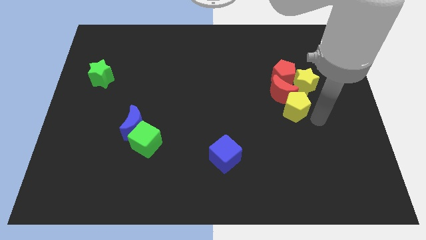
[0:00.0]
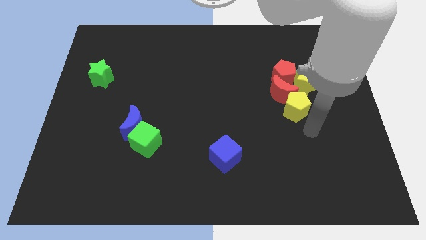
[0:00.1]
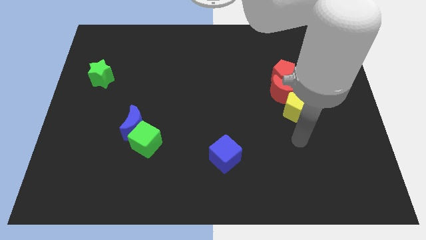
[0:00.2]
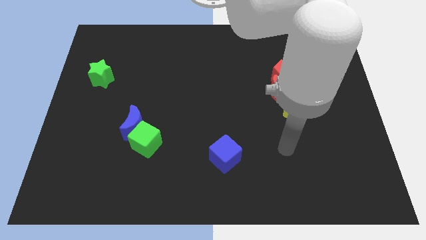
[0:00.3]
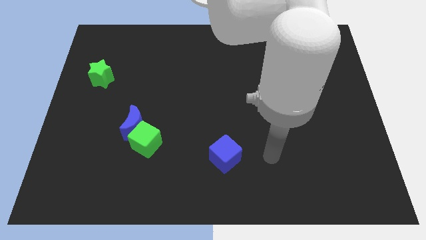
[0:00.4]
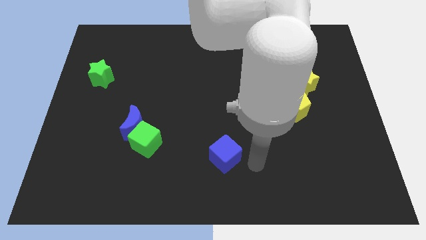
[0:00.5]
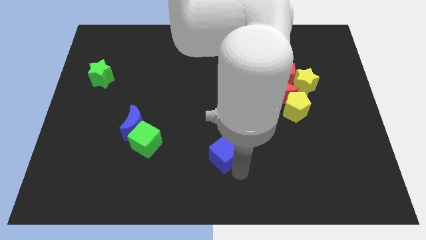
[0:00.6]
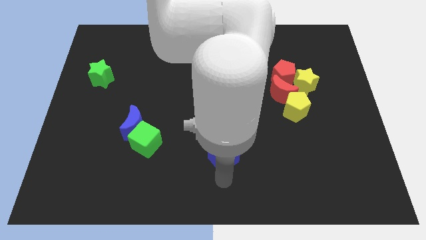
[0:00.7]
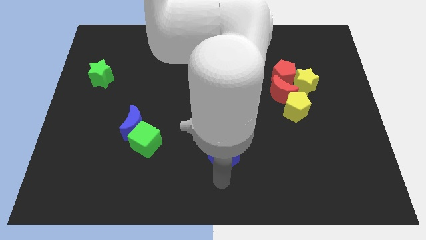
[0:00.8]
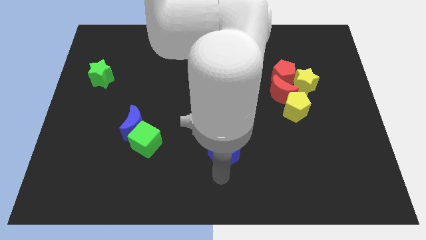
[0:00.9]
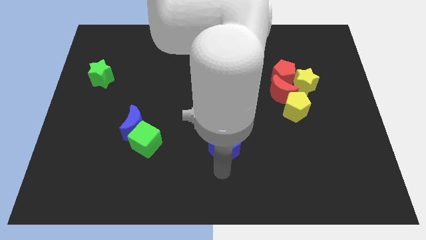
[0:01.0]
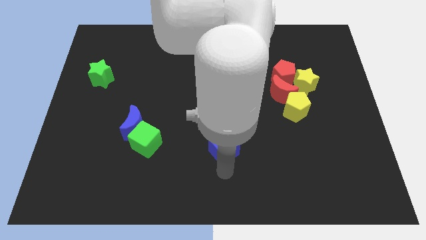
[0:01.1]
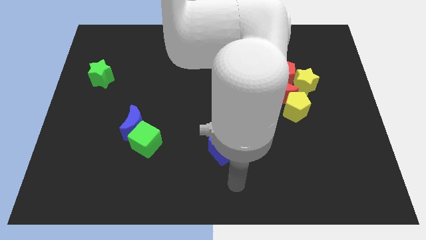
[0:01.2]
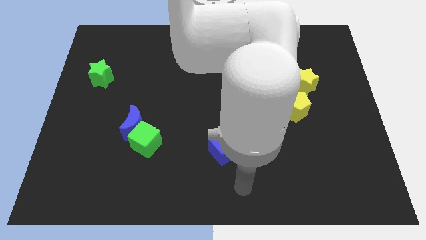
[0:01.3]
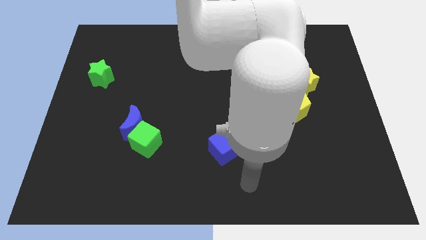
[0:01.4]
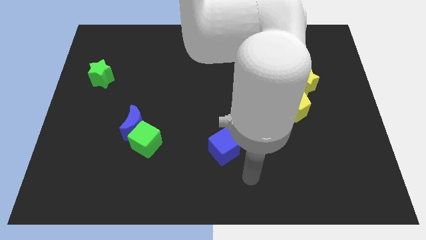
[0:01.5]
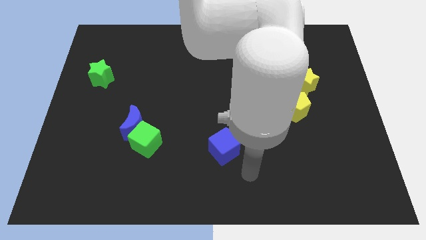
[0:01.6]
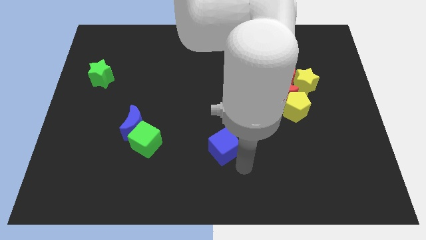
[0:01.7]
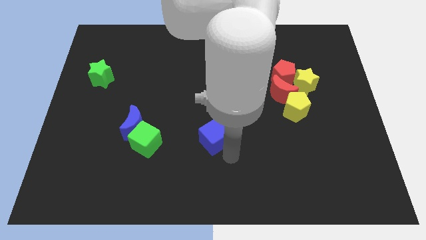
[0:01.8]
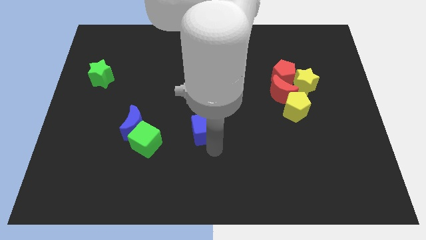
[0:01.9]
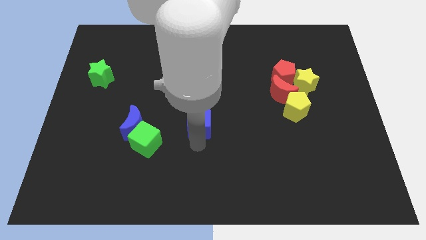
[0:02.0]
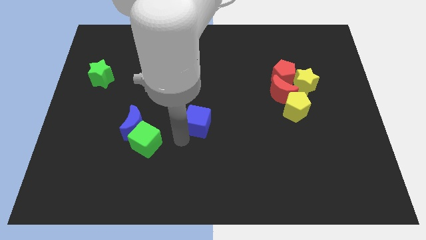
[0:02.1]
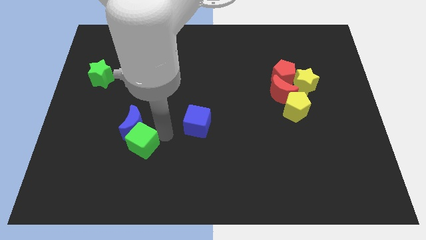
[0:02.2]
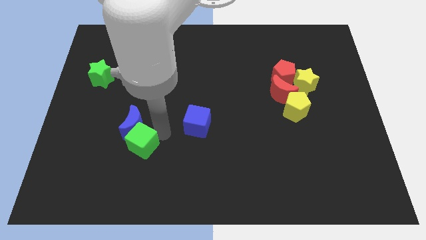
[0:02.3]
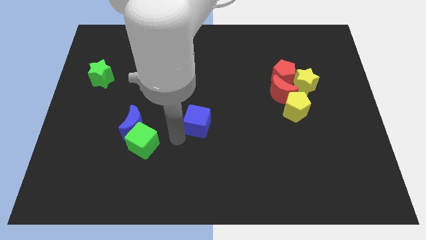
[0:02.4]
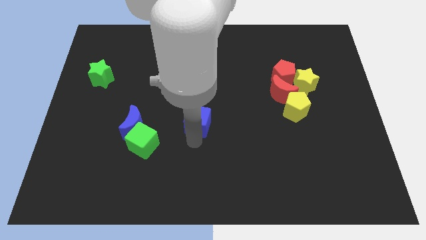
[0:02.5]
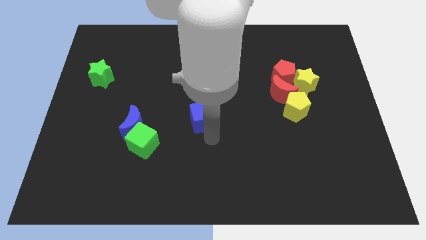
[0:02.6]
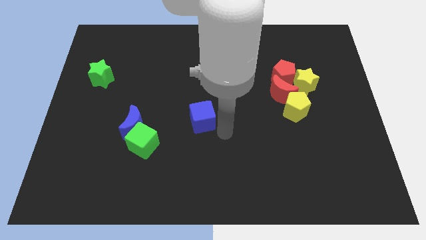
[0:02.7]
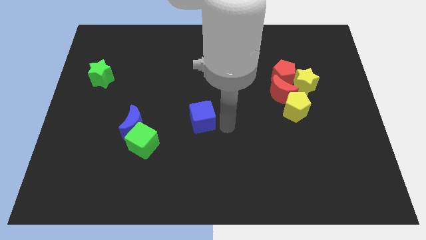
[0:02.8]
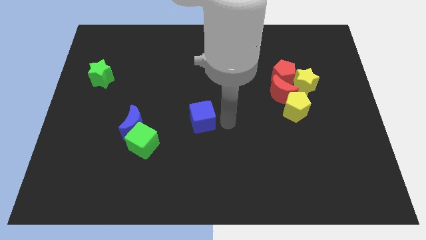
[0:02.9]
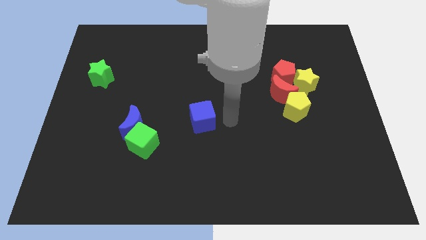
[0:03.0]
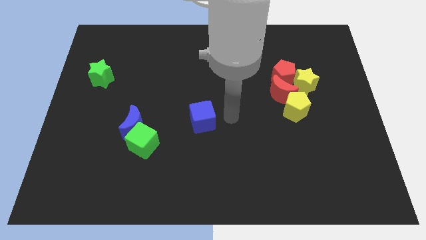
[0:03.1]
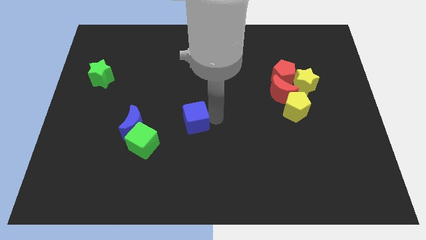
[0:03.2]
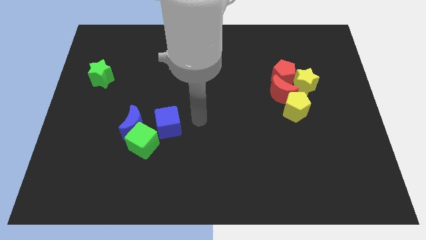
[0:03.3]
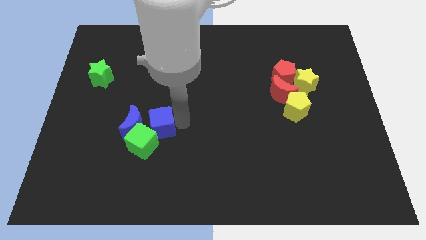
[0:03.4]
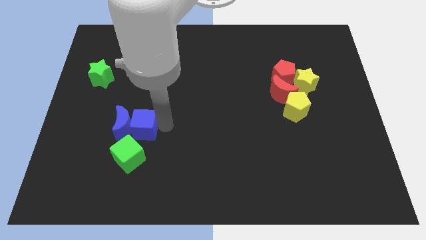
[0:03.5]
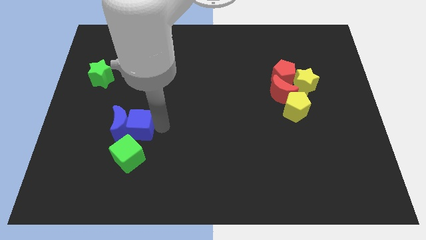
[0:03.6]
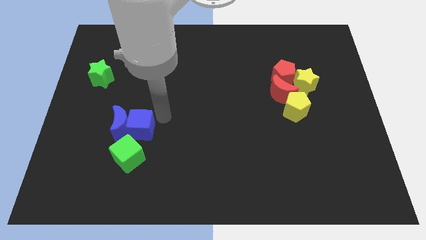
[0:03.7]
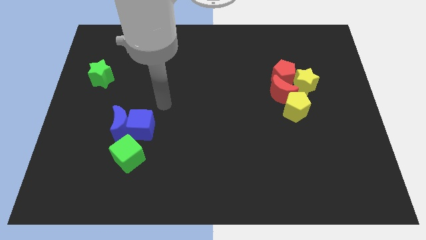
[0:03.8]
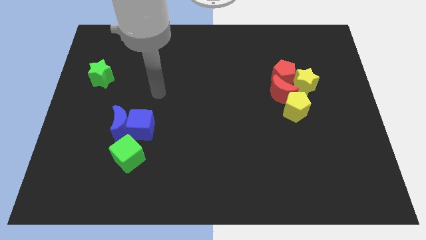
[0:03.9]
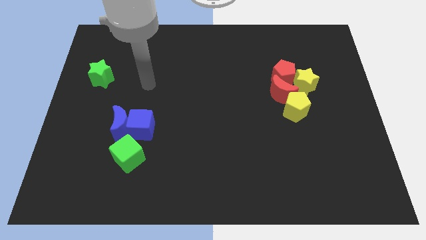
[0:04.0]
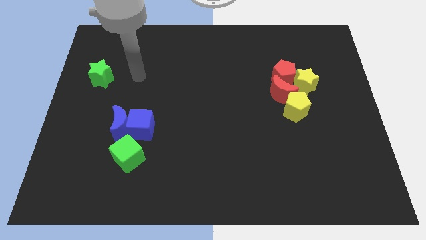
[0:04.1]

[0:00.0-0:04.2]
push the blue cube to the right of the blue crescent

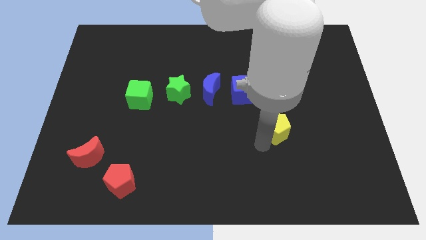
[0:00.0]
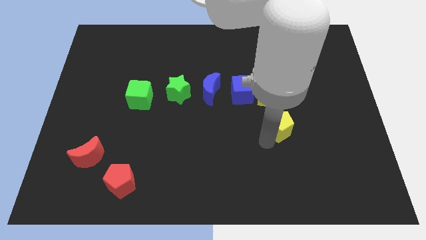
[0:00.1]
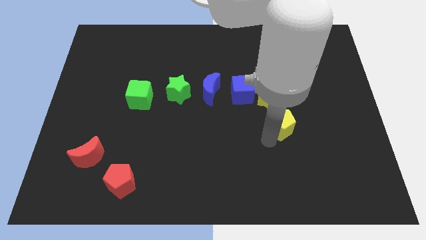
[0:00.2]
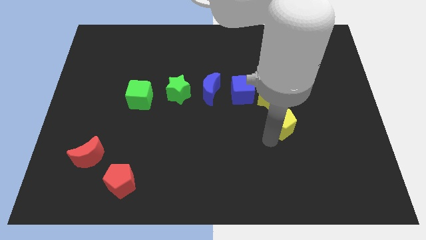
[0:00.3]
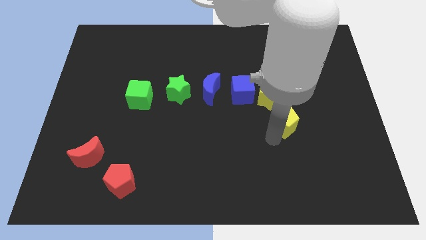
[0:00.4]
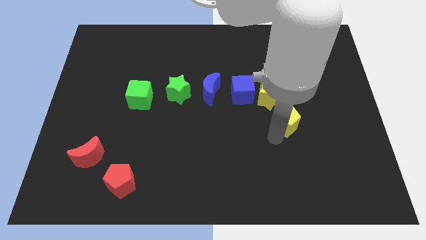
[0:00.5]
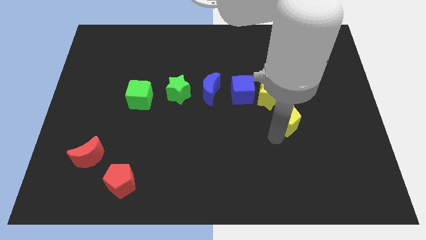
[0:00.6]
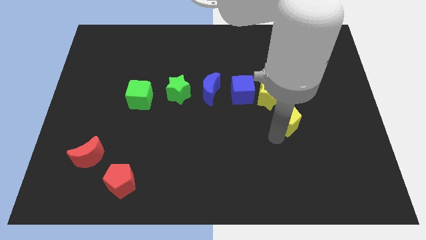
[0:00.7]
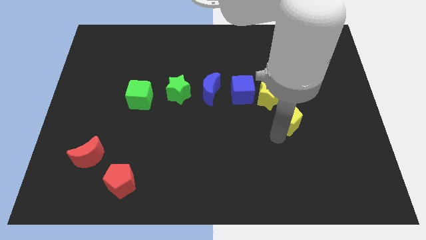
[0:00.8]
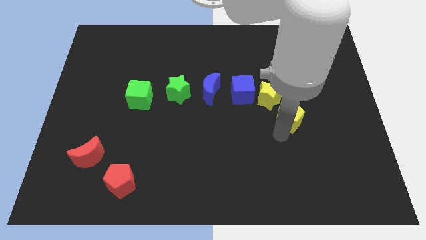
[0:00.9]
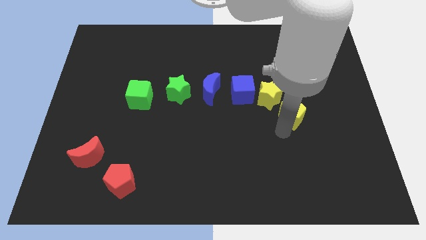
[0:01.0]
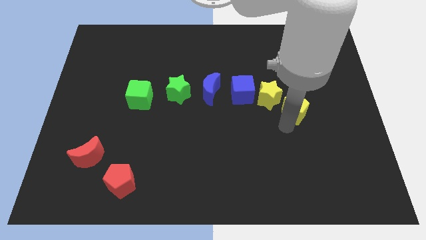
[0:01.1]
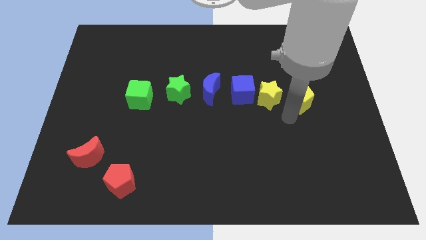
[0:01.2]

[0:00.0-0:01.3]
push the yellow pentagon up slightly

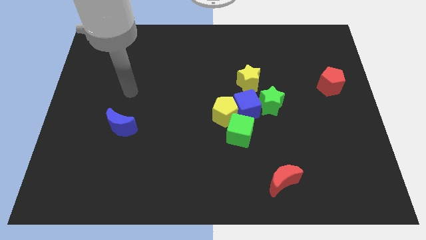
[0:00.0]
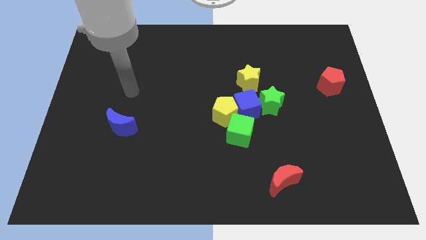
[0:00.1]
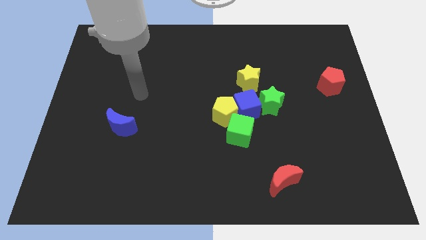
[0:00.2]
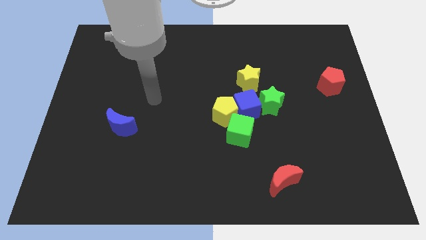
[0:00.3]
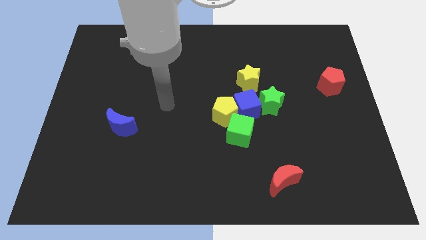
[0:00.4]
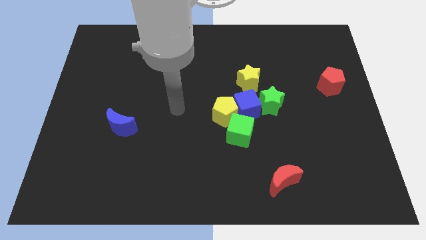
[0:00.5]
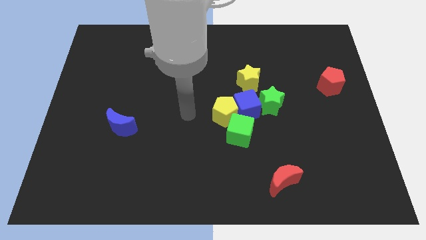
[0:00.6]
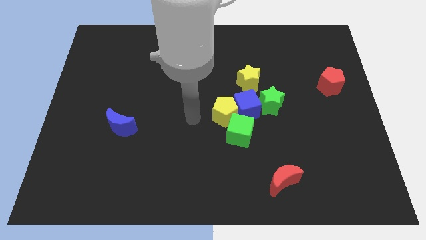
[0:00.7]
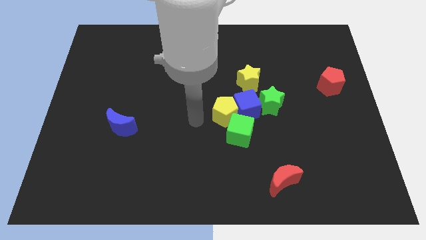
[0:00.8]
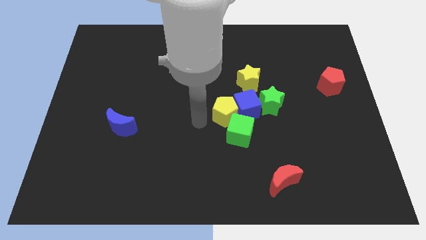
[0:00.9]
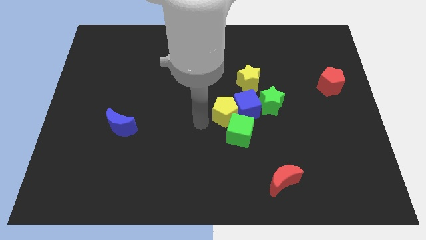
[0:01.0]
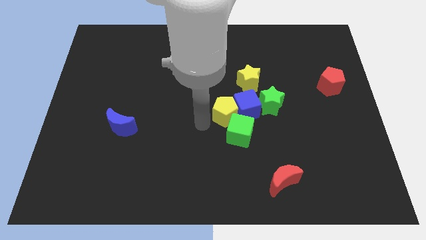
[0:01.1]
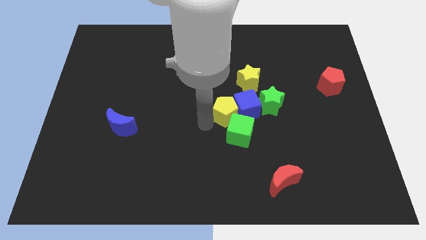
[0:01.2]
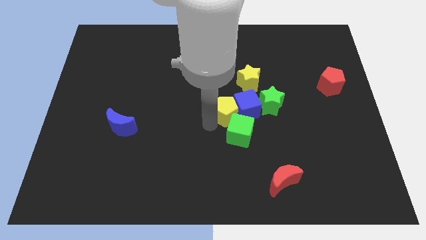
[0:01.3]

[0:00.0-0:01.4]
push your arm near yellow pentagon

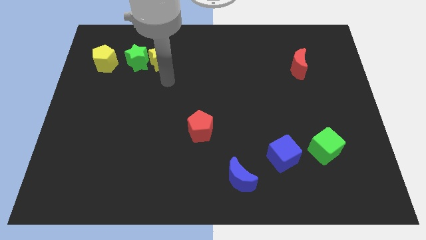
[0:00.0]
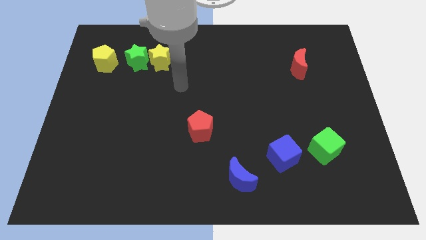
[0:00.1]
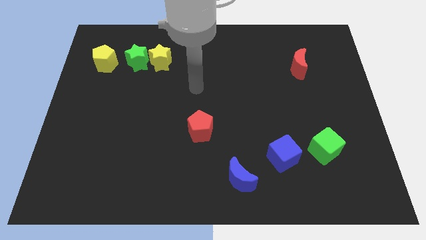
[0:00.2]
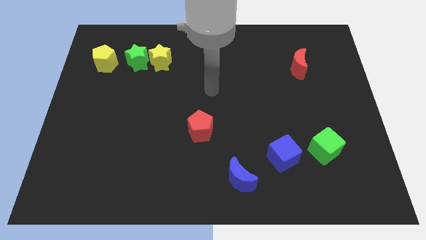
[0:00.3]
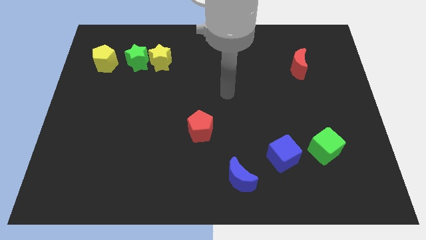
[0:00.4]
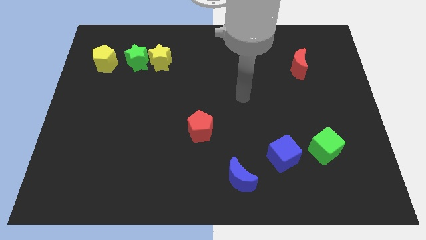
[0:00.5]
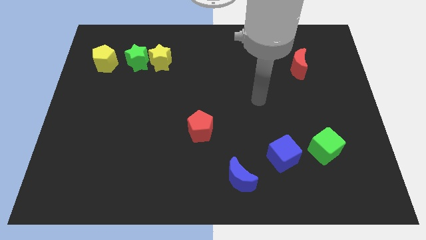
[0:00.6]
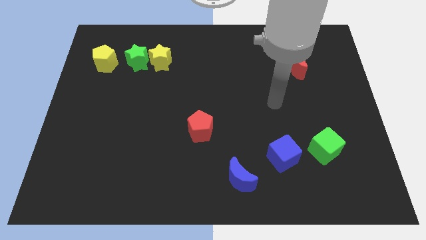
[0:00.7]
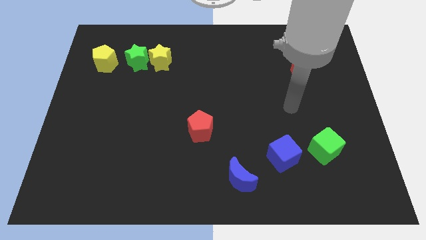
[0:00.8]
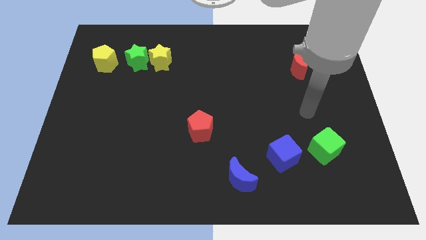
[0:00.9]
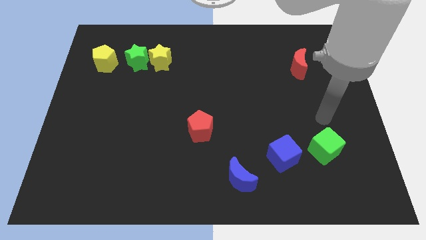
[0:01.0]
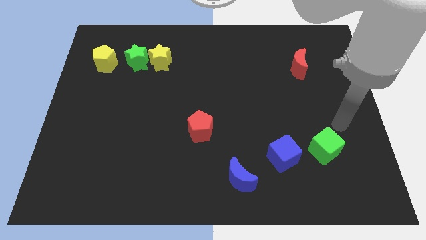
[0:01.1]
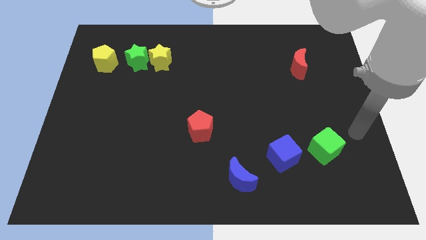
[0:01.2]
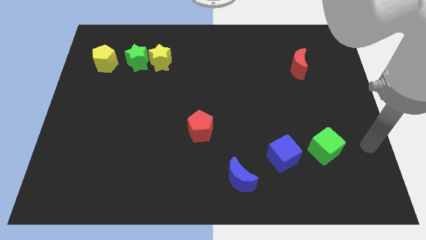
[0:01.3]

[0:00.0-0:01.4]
place your arm to the right side of the green cube

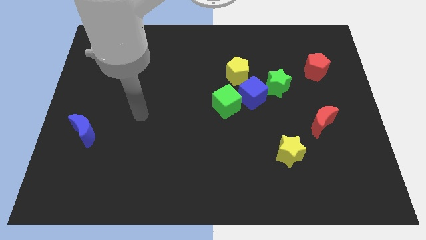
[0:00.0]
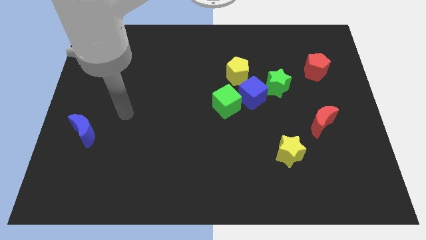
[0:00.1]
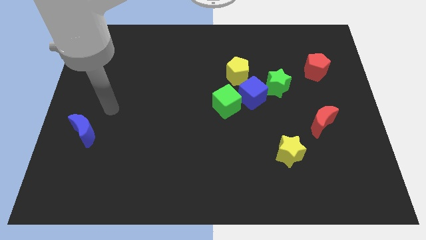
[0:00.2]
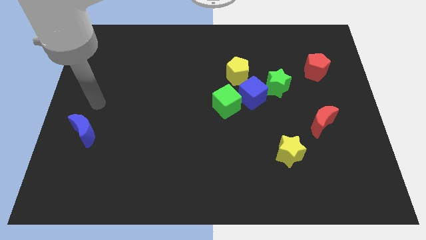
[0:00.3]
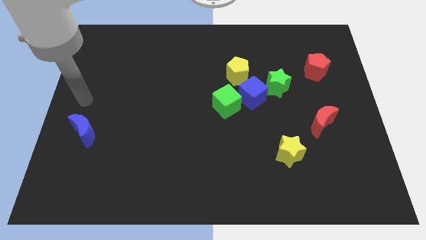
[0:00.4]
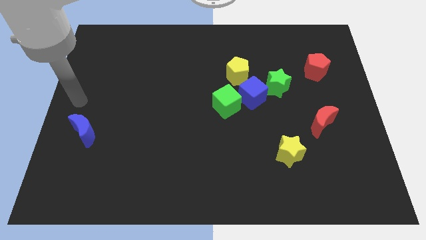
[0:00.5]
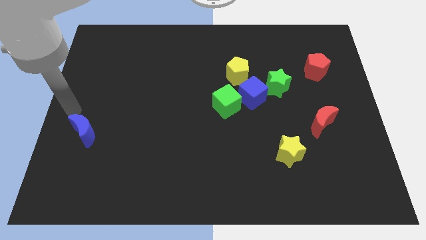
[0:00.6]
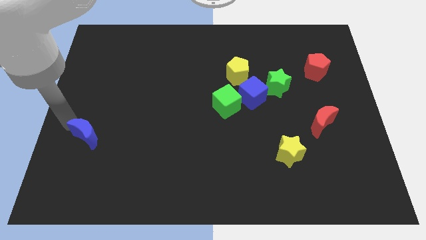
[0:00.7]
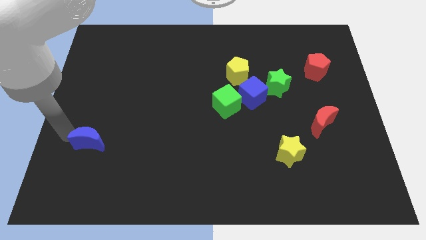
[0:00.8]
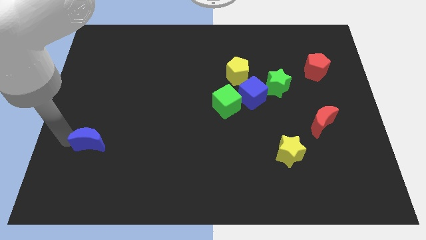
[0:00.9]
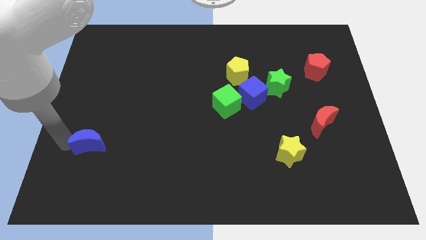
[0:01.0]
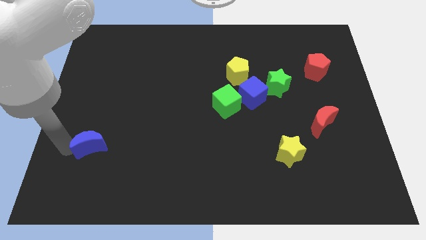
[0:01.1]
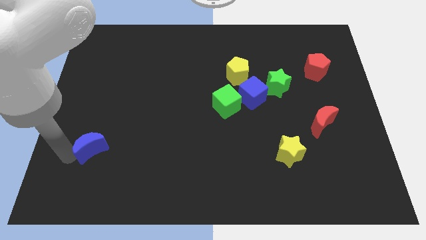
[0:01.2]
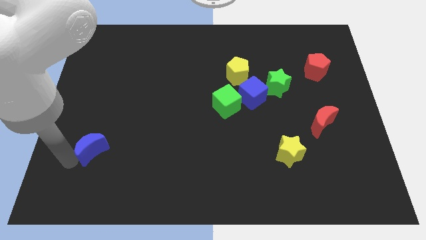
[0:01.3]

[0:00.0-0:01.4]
move the blue moon to the bottom side
